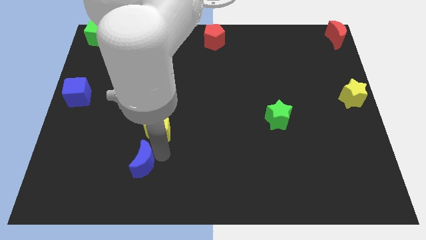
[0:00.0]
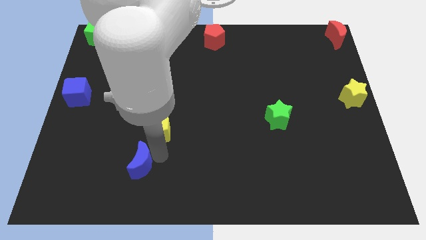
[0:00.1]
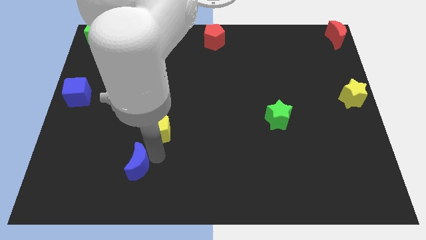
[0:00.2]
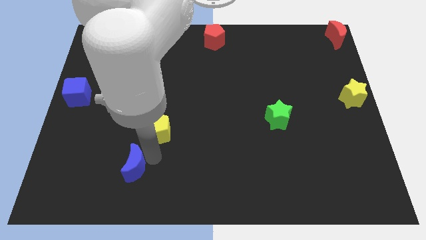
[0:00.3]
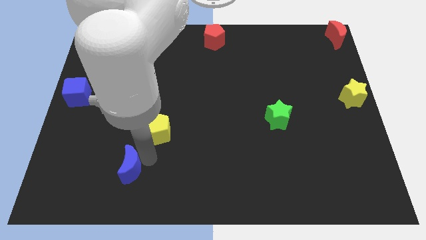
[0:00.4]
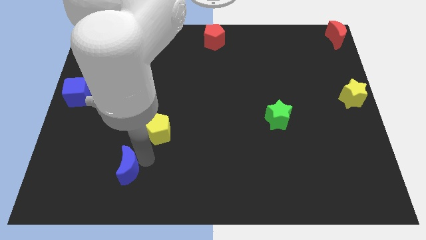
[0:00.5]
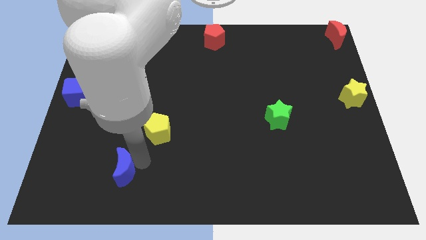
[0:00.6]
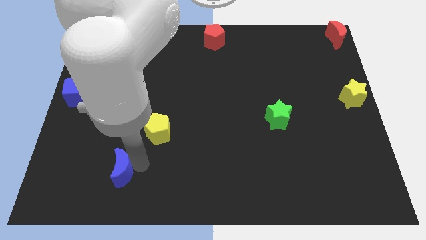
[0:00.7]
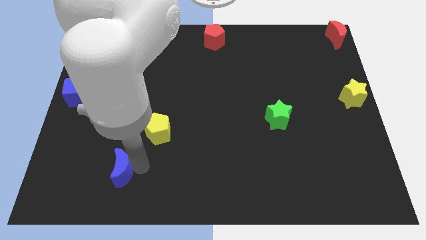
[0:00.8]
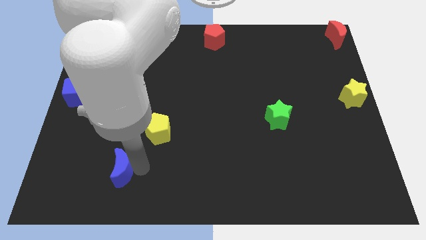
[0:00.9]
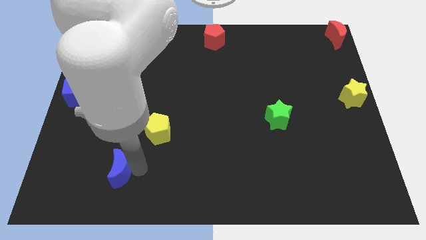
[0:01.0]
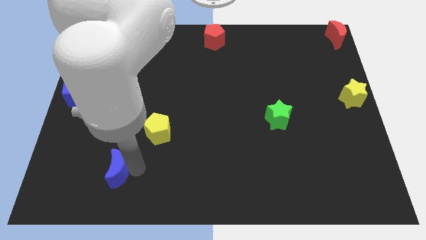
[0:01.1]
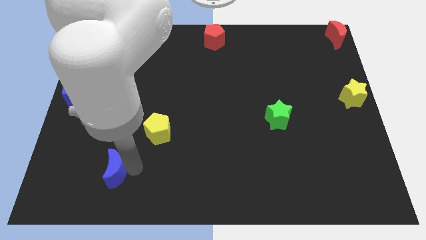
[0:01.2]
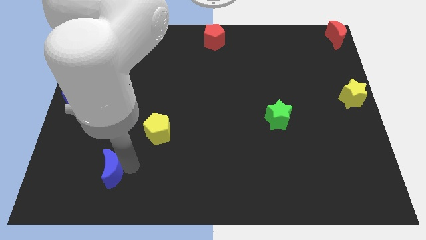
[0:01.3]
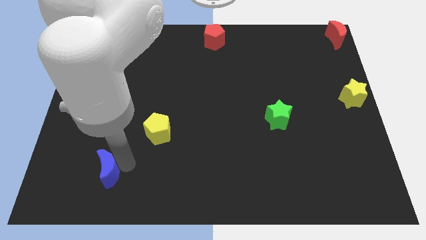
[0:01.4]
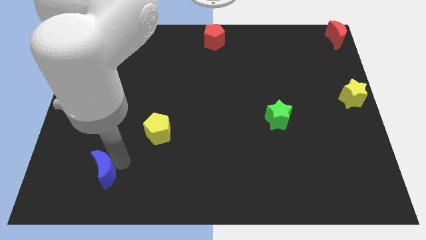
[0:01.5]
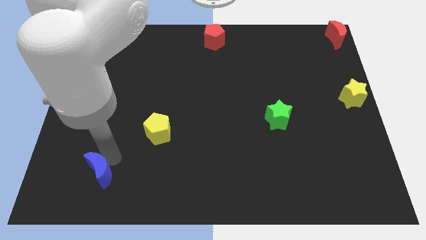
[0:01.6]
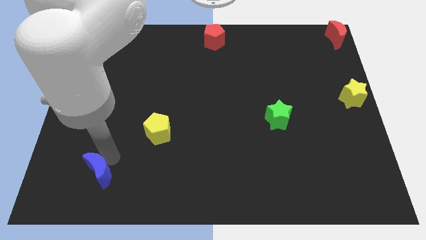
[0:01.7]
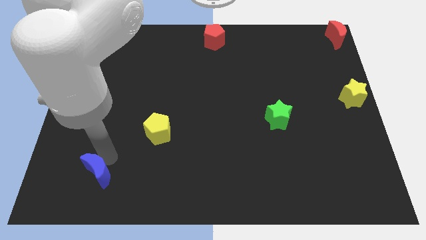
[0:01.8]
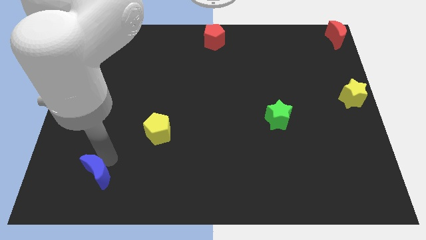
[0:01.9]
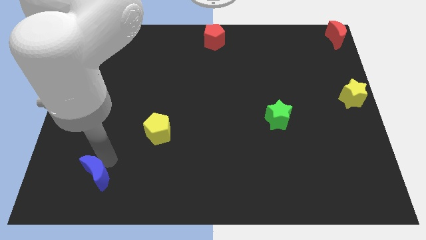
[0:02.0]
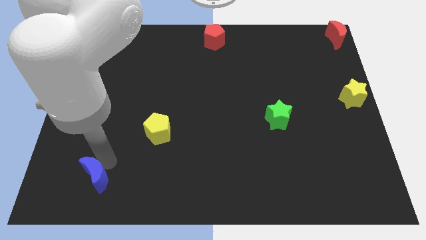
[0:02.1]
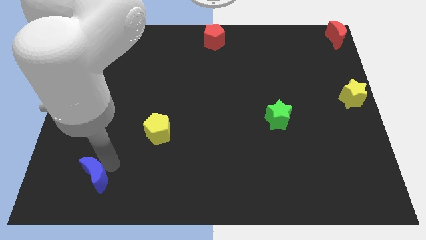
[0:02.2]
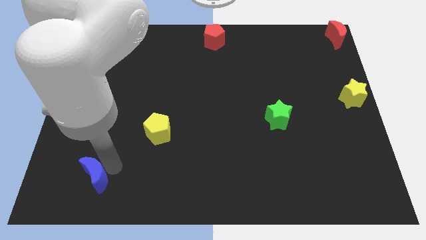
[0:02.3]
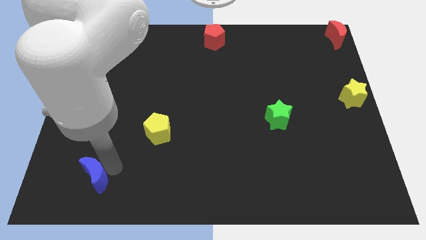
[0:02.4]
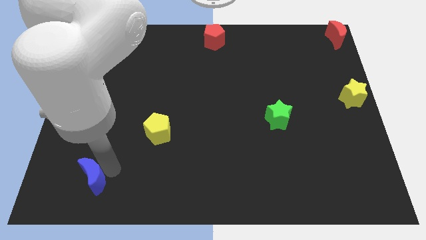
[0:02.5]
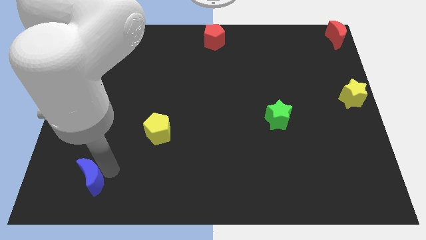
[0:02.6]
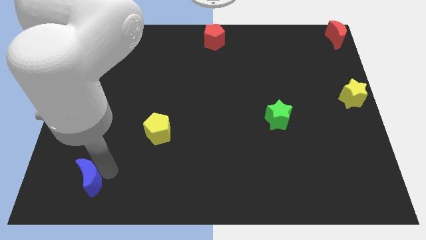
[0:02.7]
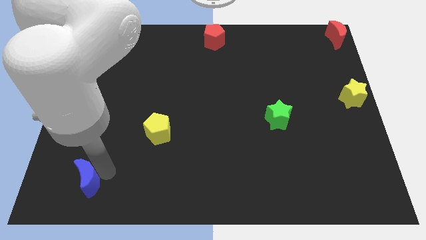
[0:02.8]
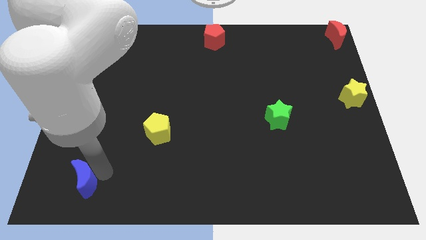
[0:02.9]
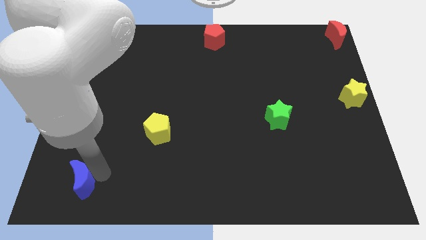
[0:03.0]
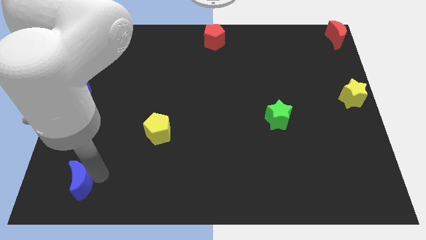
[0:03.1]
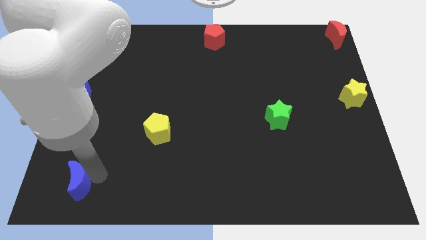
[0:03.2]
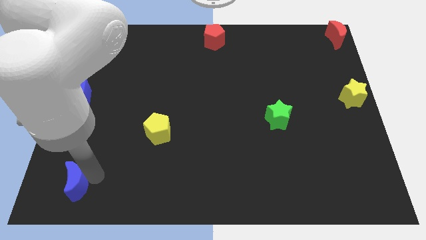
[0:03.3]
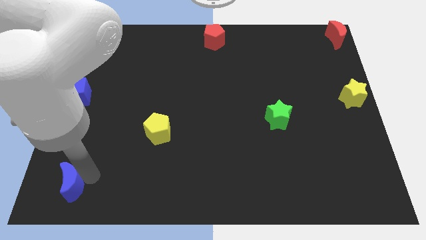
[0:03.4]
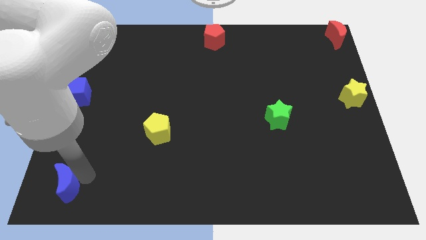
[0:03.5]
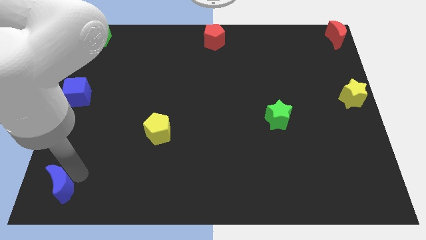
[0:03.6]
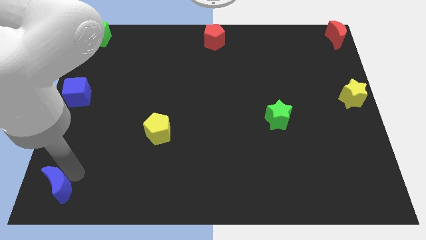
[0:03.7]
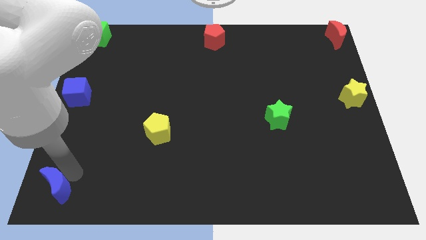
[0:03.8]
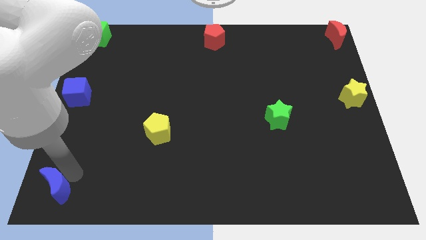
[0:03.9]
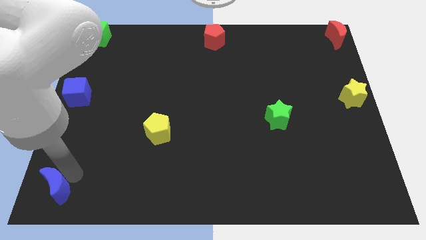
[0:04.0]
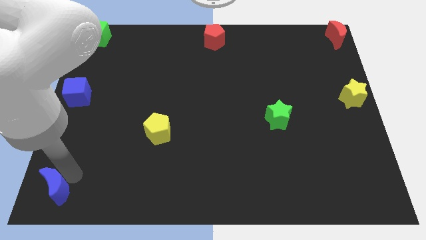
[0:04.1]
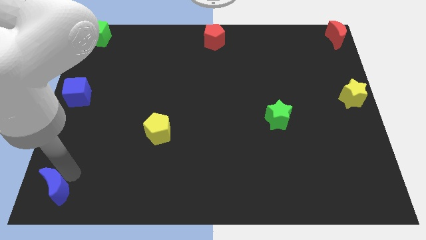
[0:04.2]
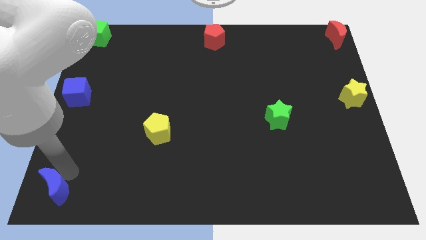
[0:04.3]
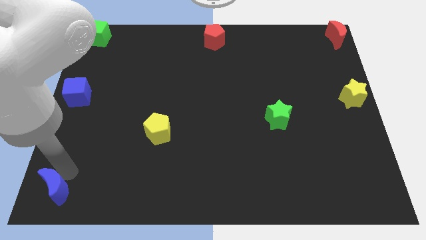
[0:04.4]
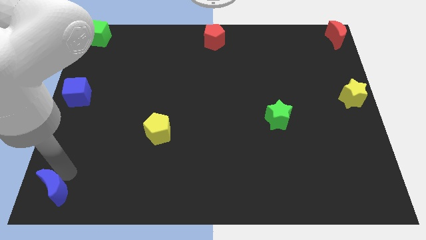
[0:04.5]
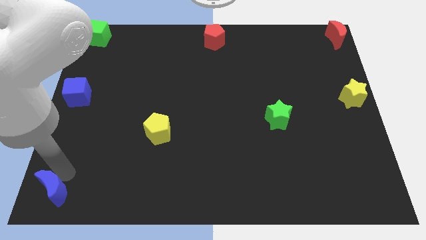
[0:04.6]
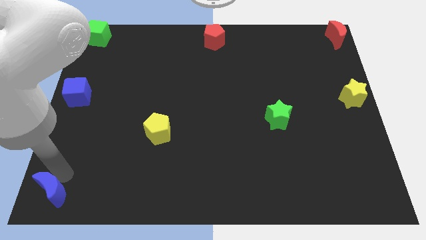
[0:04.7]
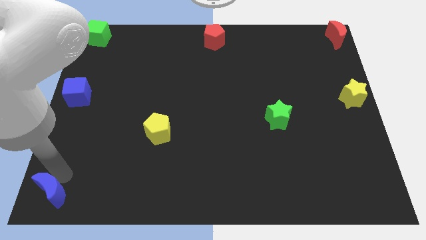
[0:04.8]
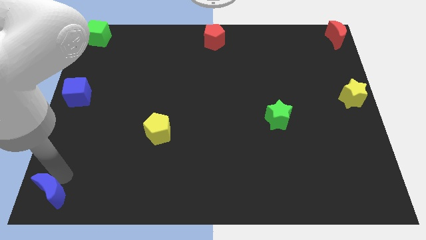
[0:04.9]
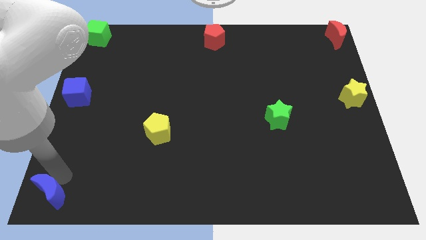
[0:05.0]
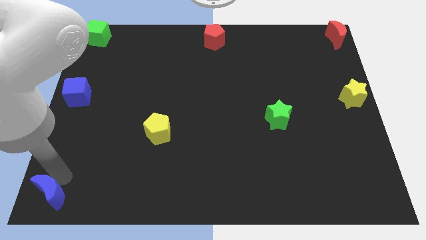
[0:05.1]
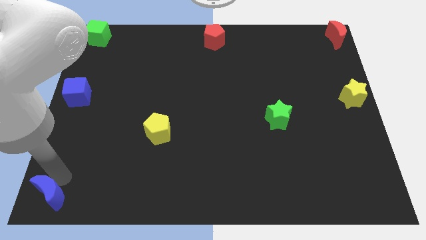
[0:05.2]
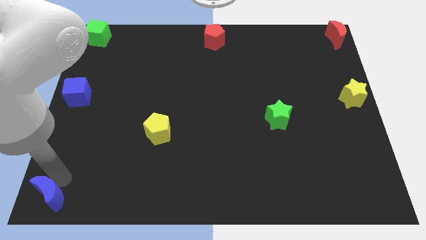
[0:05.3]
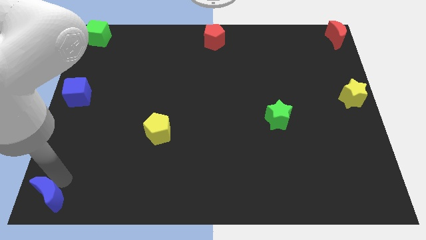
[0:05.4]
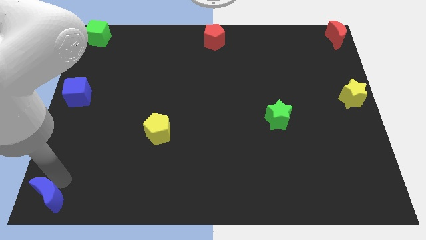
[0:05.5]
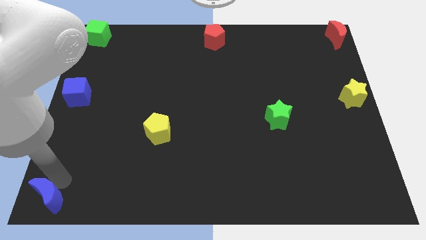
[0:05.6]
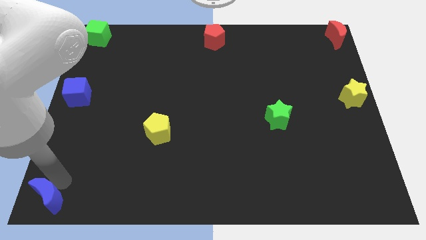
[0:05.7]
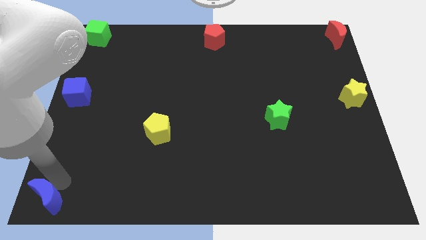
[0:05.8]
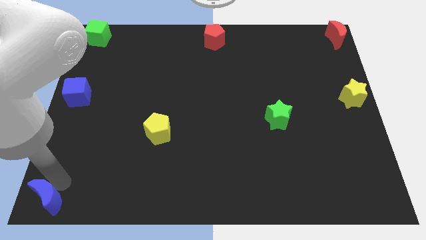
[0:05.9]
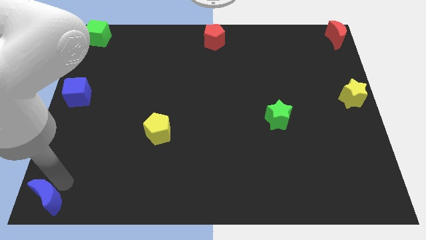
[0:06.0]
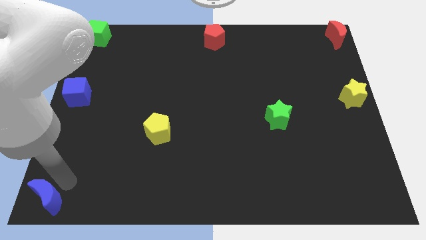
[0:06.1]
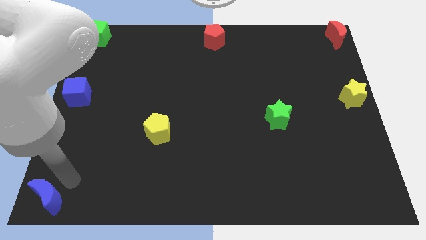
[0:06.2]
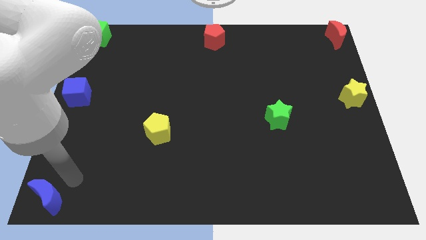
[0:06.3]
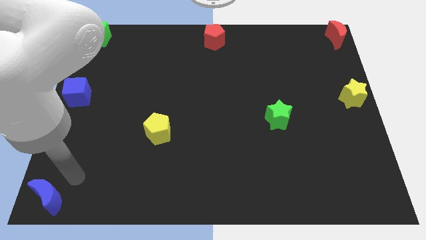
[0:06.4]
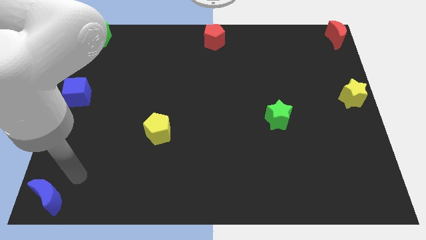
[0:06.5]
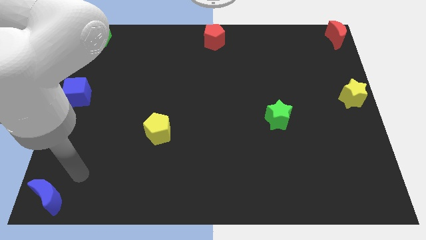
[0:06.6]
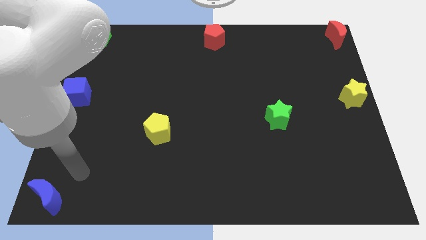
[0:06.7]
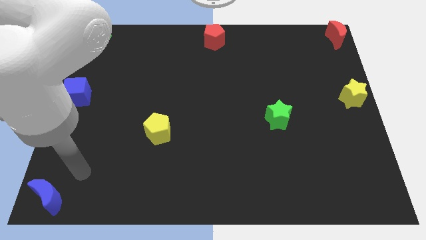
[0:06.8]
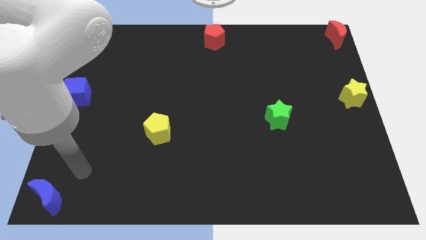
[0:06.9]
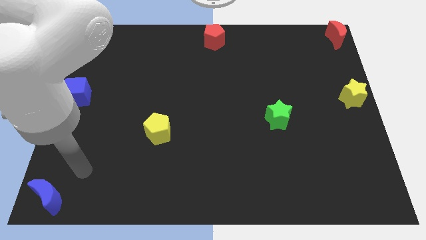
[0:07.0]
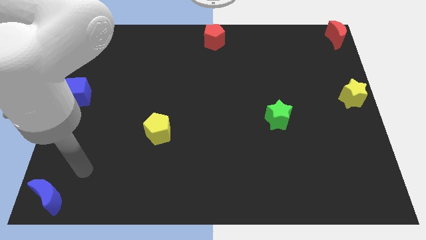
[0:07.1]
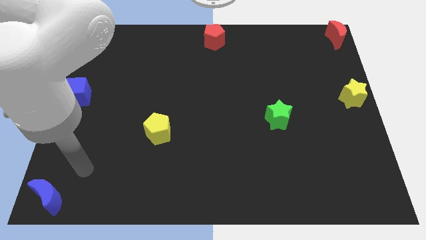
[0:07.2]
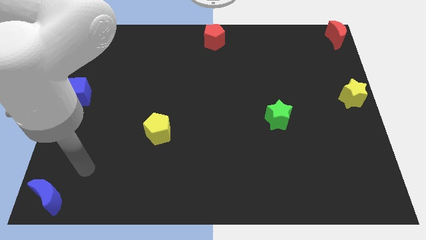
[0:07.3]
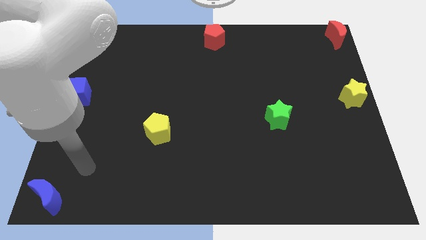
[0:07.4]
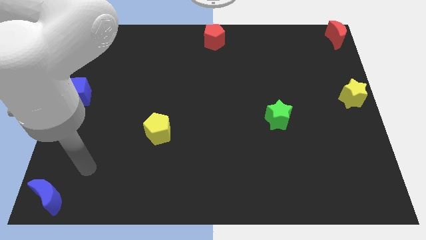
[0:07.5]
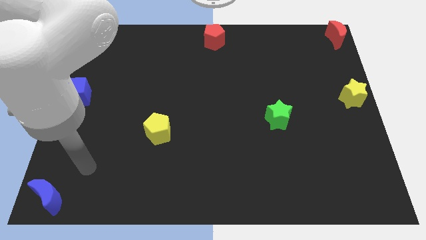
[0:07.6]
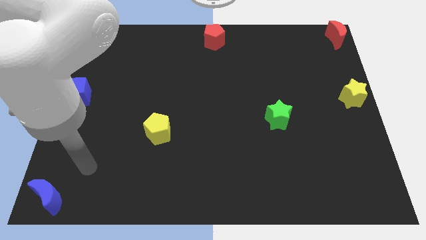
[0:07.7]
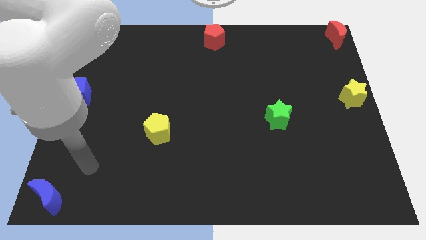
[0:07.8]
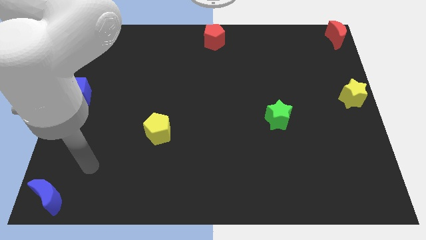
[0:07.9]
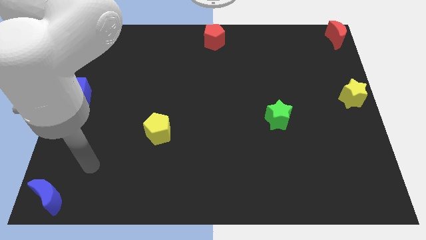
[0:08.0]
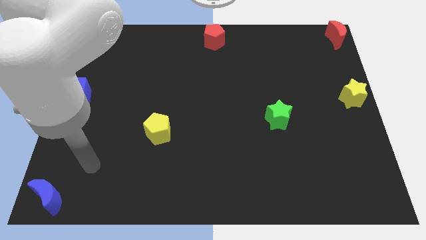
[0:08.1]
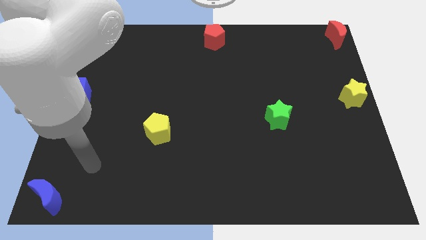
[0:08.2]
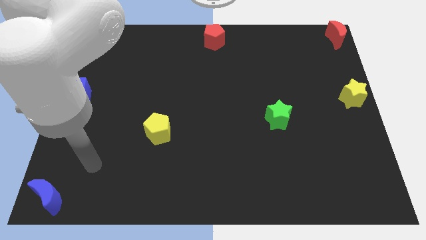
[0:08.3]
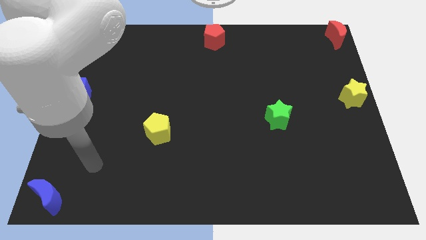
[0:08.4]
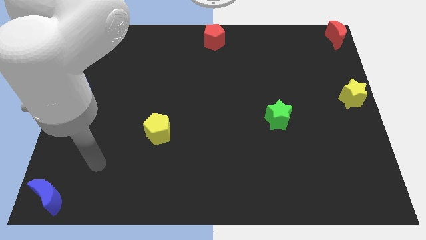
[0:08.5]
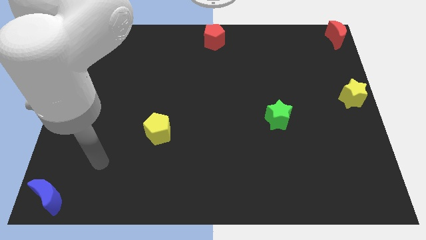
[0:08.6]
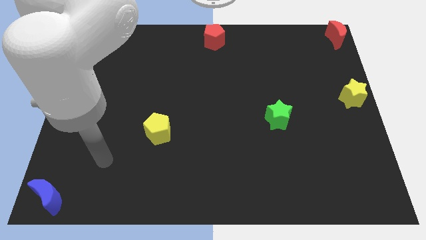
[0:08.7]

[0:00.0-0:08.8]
move the blue crescent to the bottom left corner

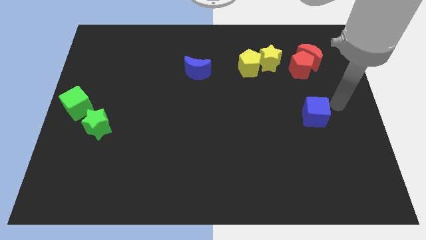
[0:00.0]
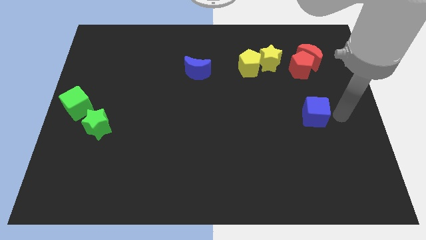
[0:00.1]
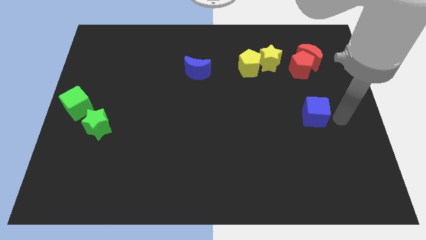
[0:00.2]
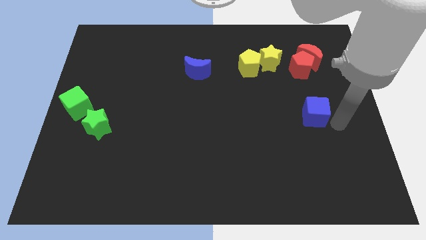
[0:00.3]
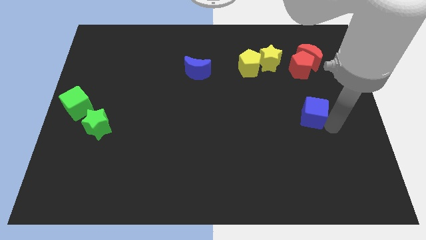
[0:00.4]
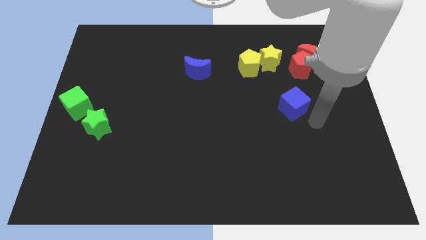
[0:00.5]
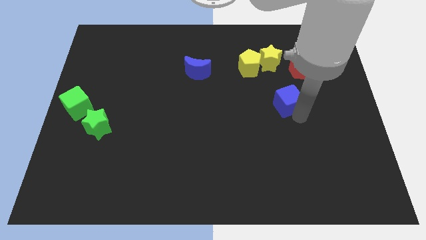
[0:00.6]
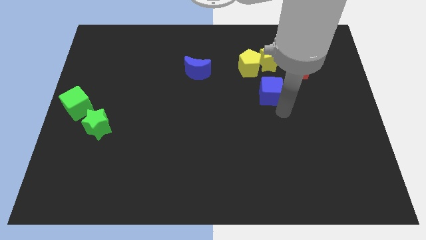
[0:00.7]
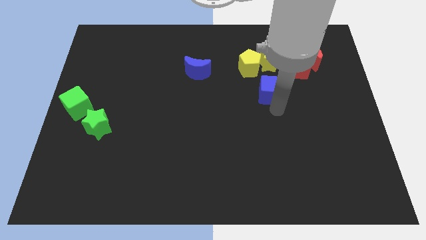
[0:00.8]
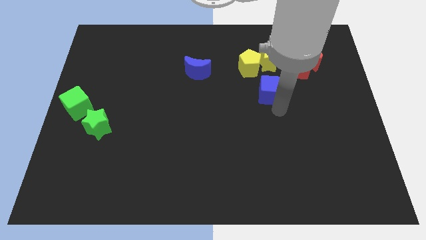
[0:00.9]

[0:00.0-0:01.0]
place the blue cube below the yellow star
